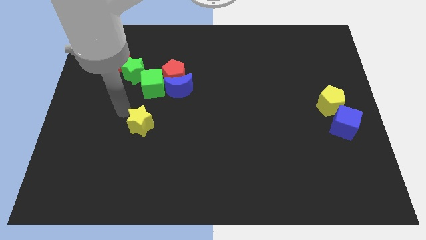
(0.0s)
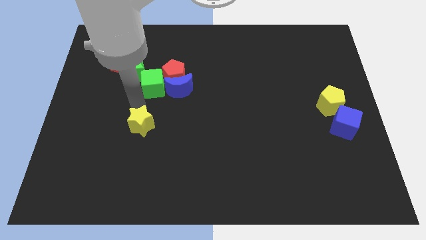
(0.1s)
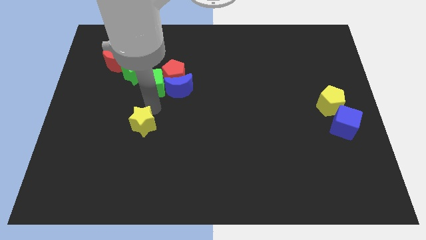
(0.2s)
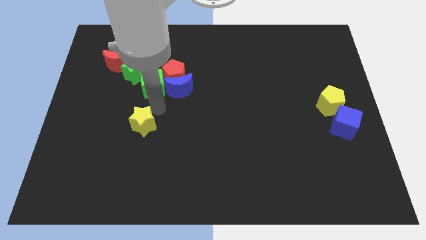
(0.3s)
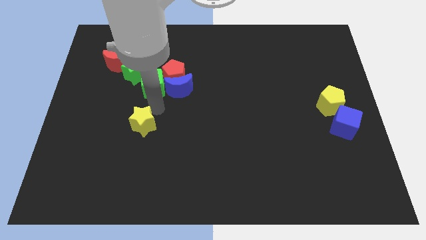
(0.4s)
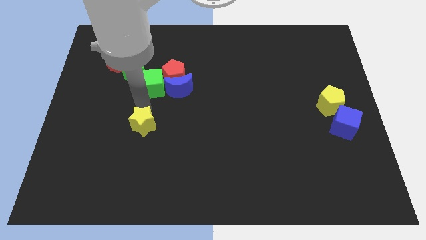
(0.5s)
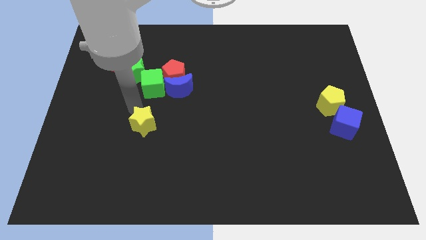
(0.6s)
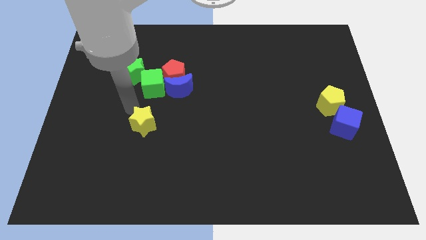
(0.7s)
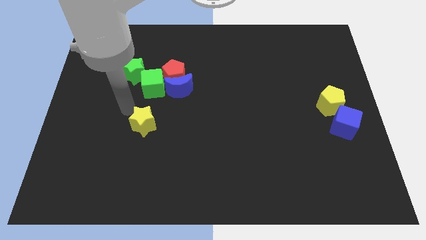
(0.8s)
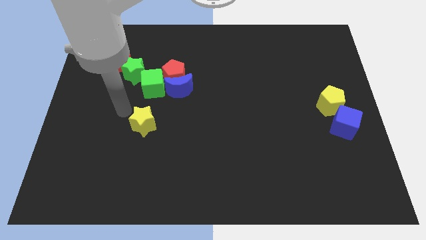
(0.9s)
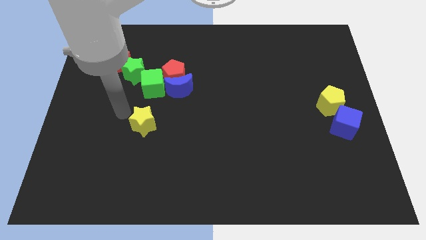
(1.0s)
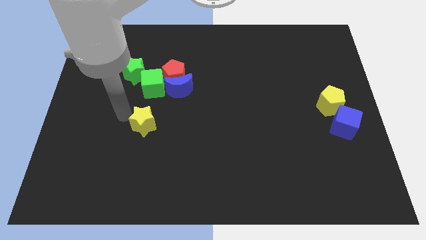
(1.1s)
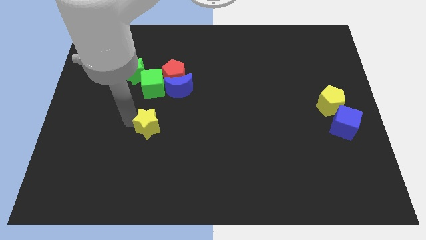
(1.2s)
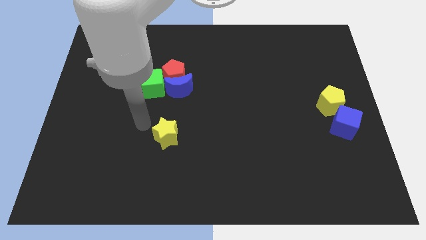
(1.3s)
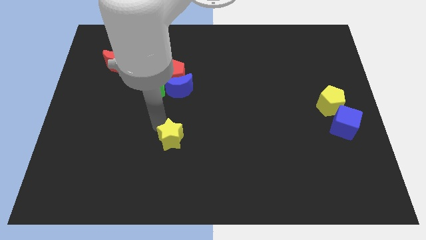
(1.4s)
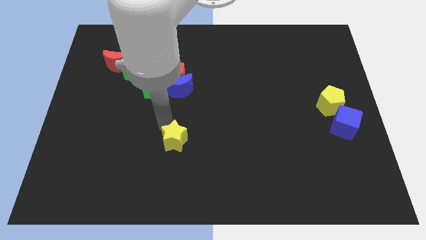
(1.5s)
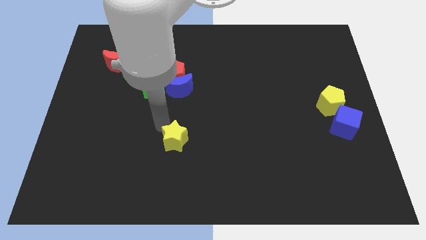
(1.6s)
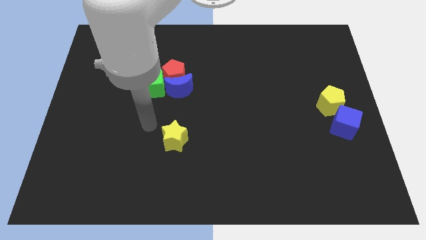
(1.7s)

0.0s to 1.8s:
place the yellow star parallel to the bottom of the blue moon

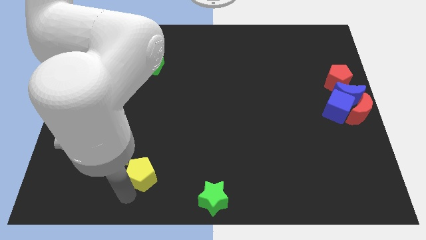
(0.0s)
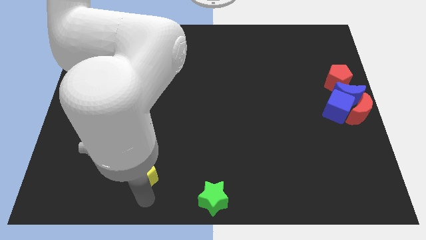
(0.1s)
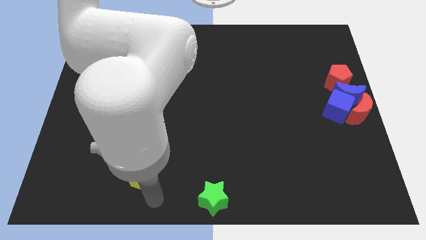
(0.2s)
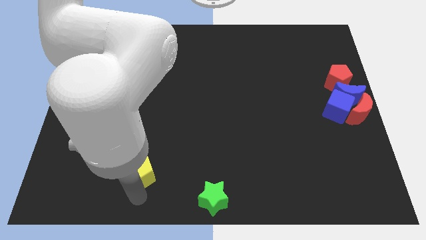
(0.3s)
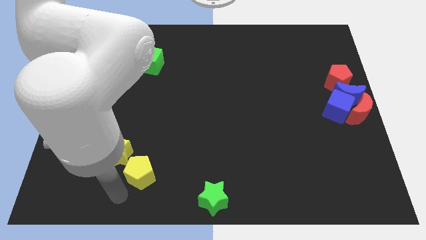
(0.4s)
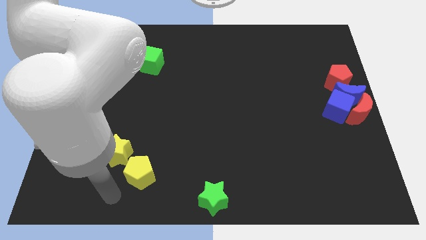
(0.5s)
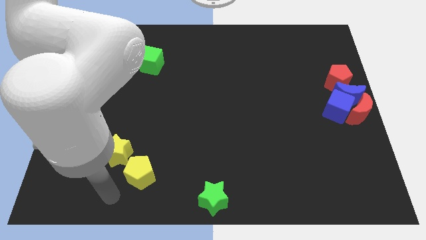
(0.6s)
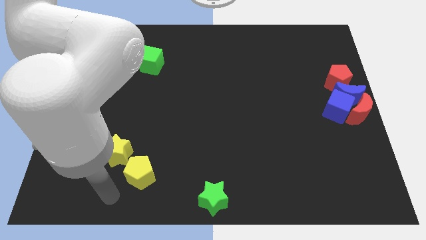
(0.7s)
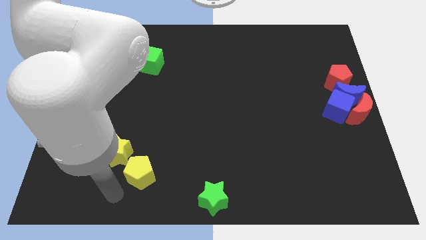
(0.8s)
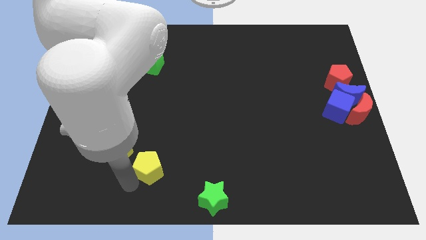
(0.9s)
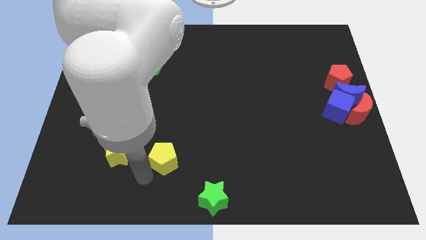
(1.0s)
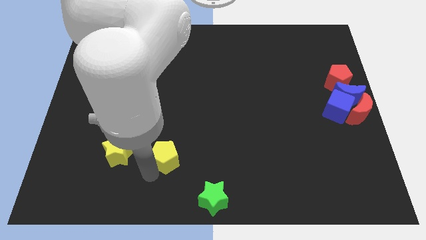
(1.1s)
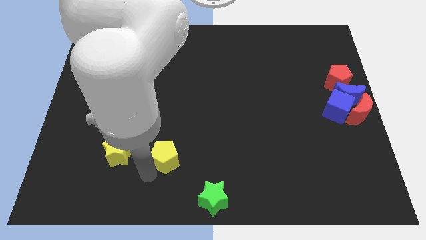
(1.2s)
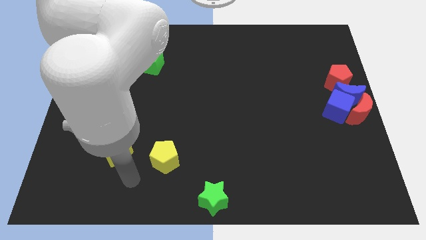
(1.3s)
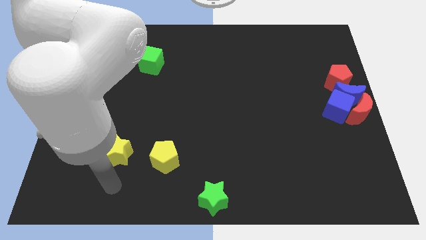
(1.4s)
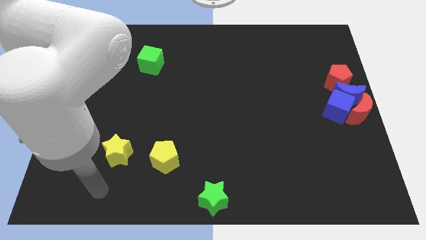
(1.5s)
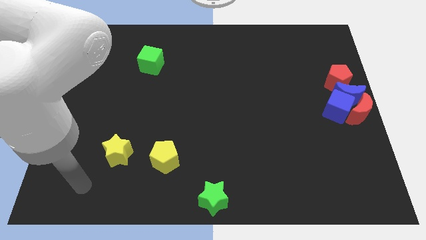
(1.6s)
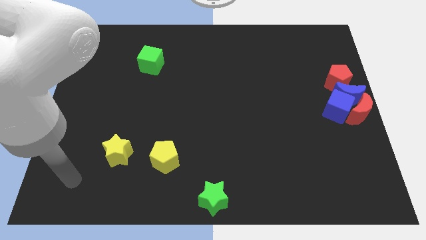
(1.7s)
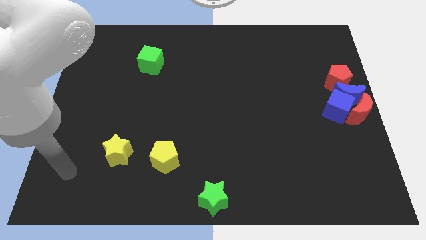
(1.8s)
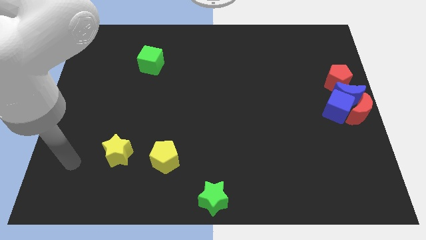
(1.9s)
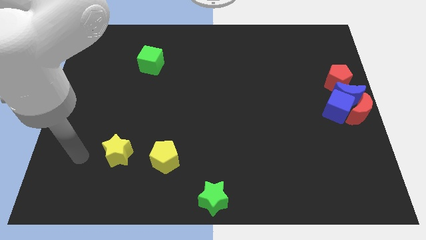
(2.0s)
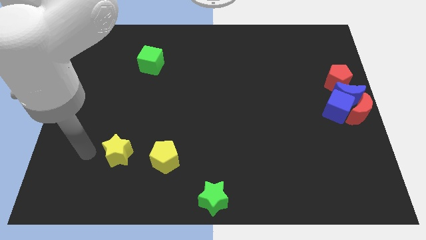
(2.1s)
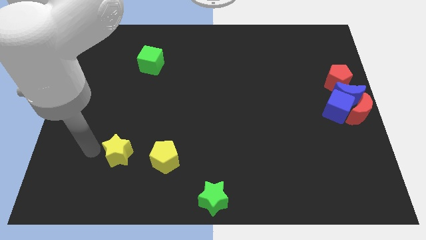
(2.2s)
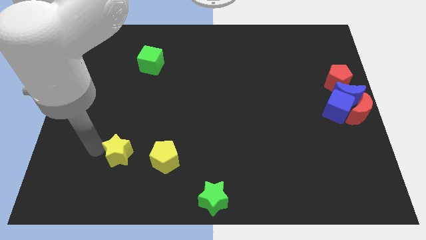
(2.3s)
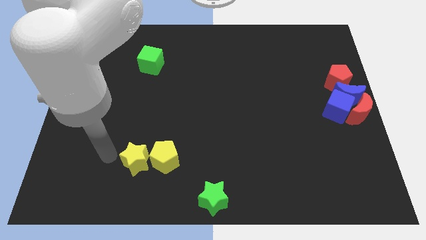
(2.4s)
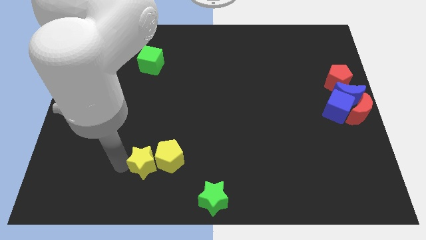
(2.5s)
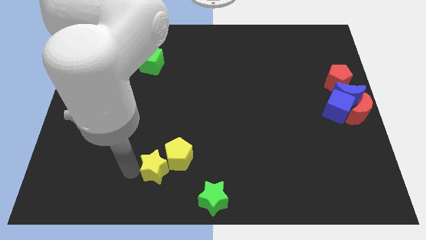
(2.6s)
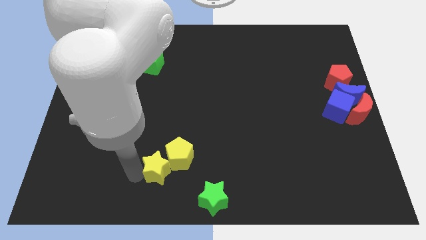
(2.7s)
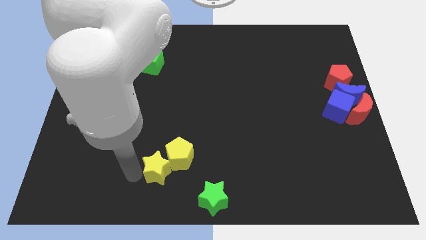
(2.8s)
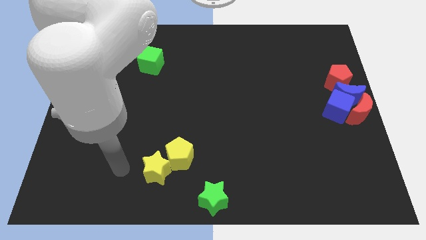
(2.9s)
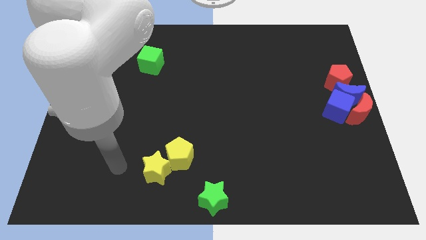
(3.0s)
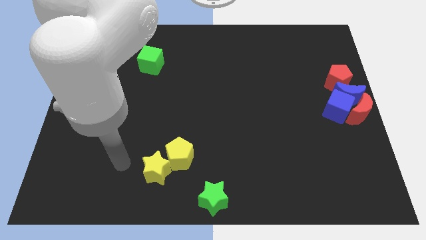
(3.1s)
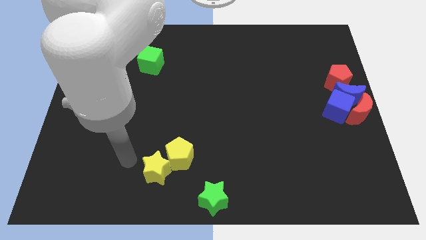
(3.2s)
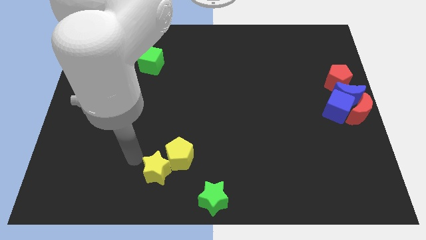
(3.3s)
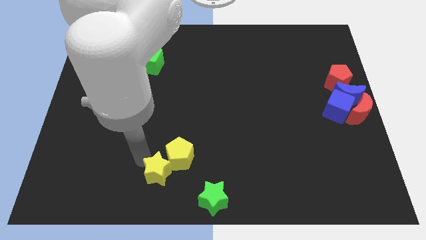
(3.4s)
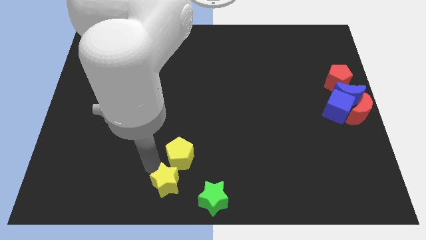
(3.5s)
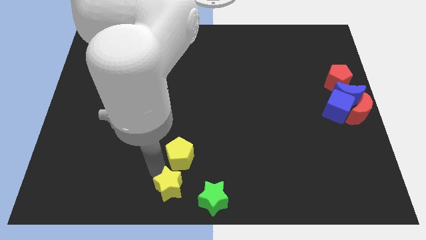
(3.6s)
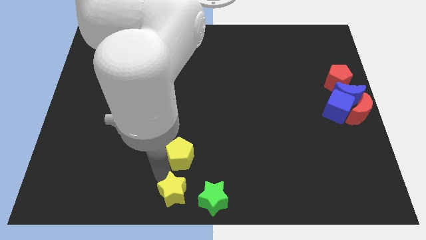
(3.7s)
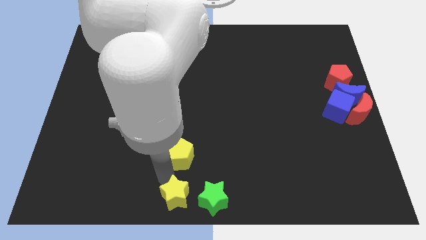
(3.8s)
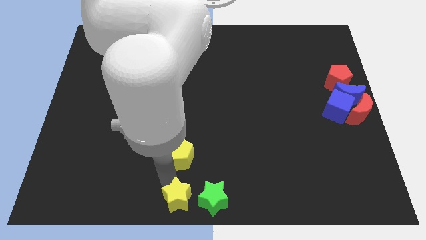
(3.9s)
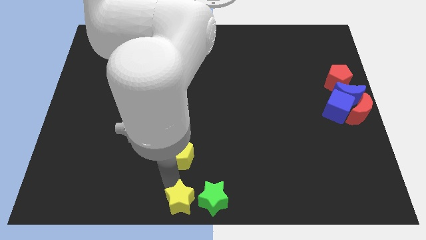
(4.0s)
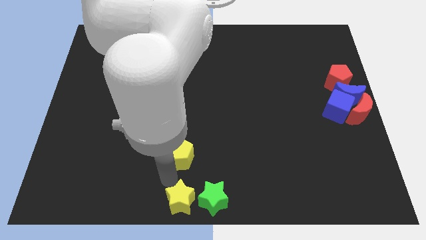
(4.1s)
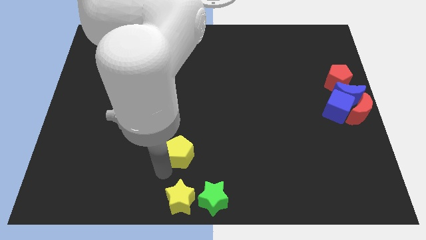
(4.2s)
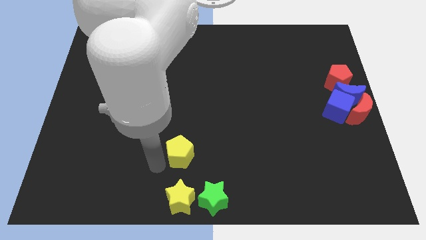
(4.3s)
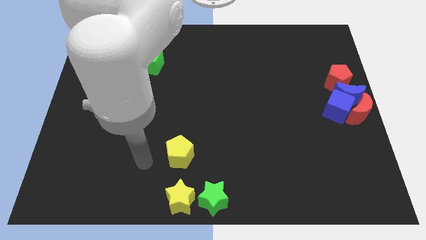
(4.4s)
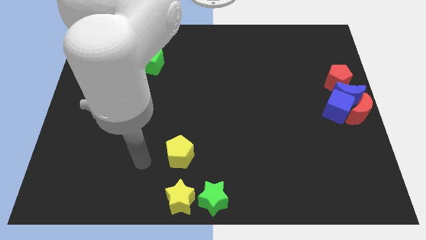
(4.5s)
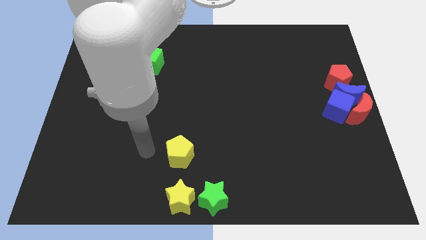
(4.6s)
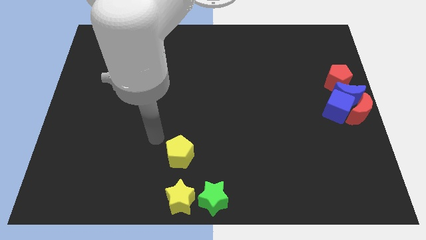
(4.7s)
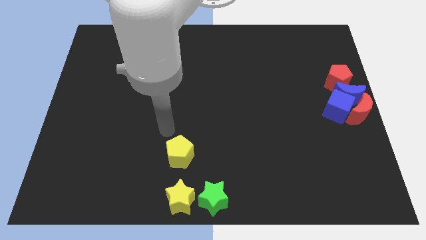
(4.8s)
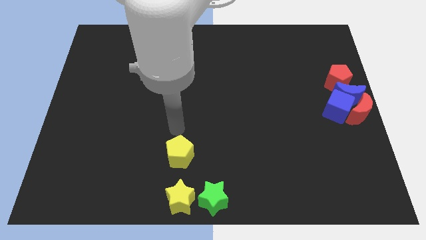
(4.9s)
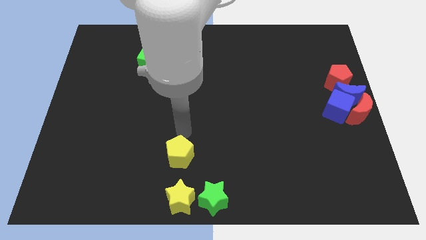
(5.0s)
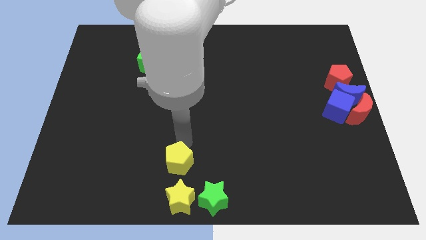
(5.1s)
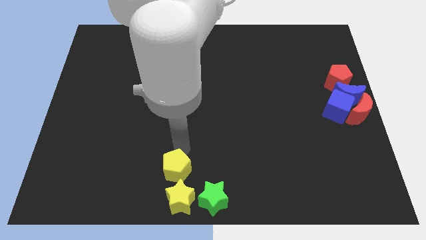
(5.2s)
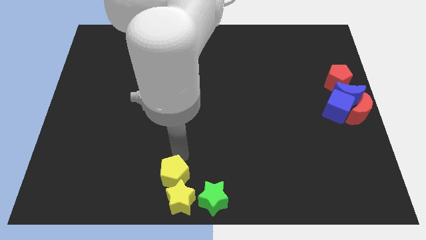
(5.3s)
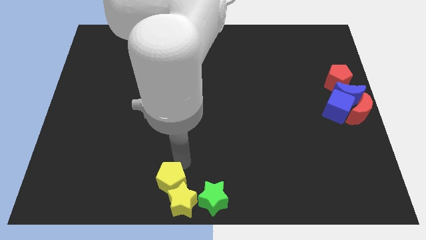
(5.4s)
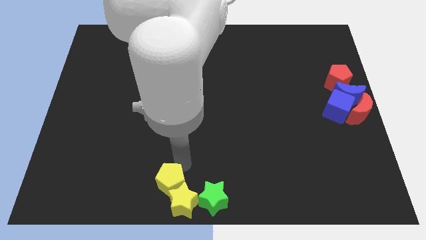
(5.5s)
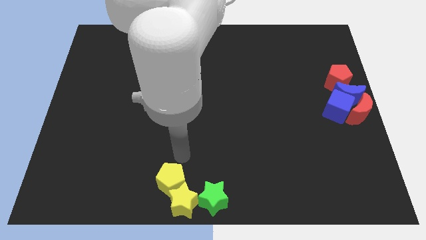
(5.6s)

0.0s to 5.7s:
slide the yellow blocks towards the green star

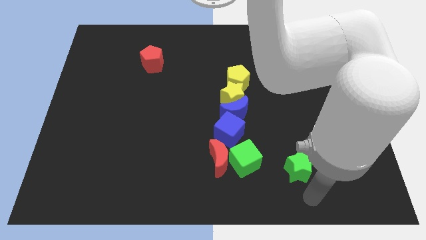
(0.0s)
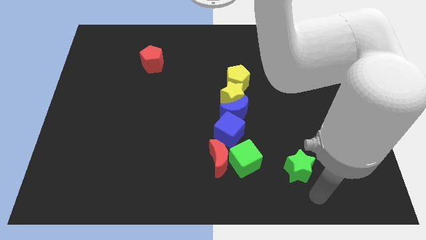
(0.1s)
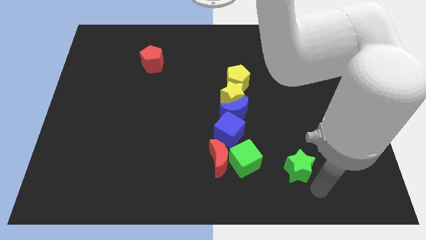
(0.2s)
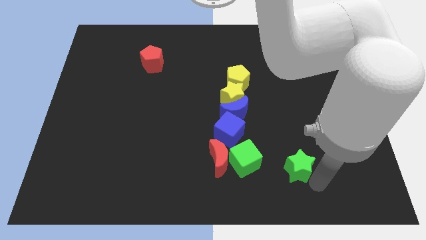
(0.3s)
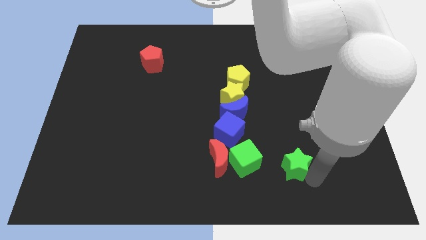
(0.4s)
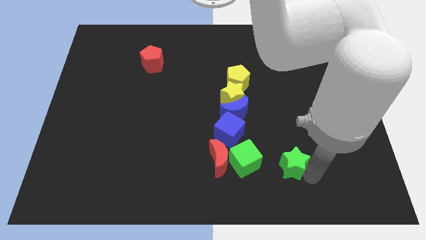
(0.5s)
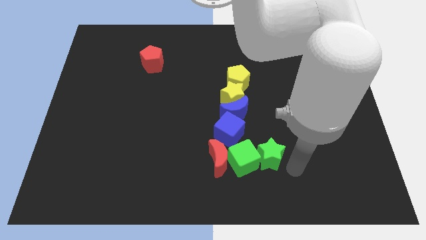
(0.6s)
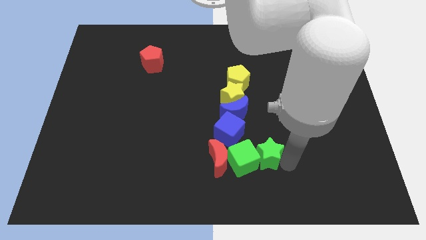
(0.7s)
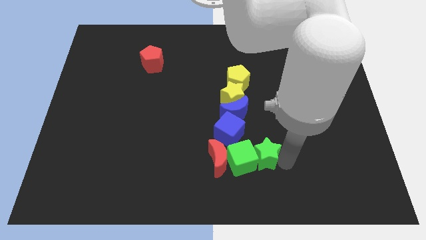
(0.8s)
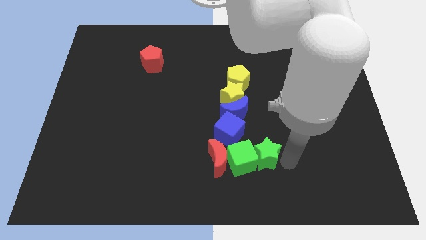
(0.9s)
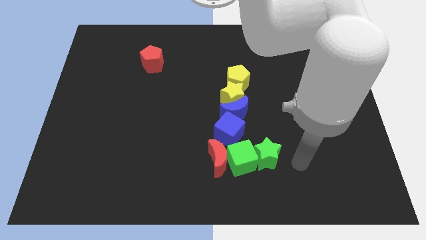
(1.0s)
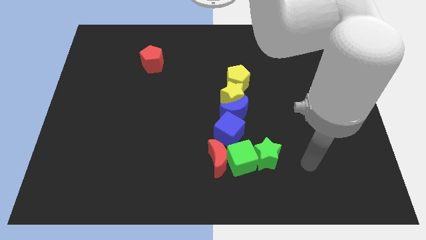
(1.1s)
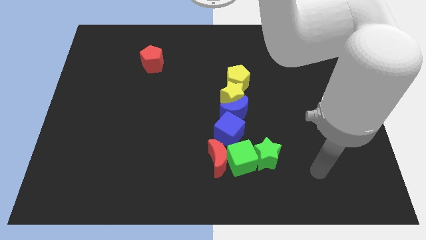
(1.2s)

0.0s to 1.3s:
push green star into green cube
